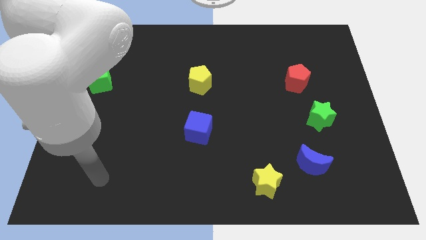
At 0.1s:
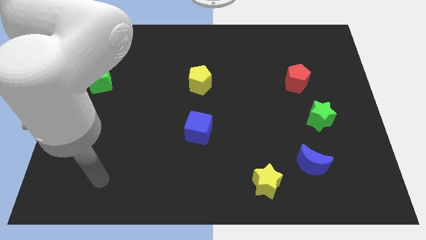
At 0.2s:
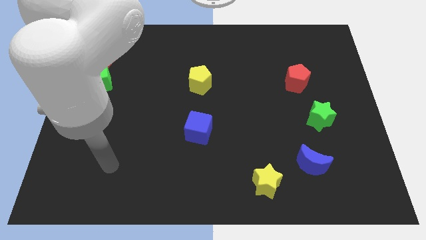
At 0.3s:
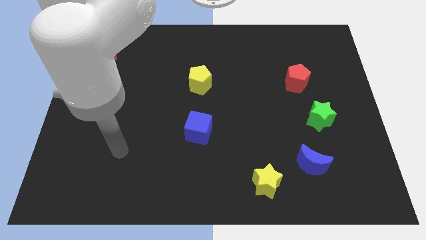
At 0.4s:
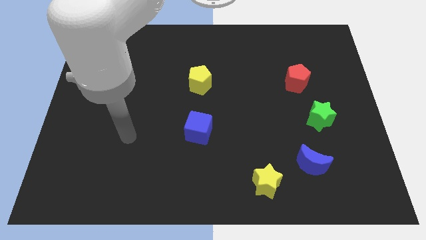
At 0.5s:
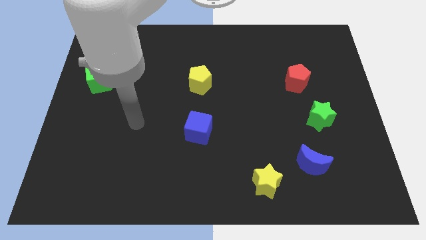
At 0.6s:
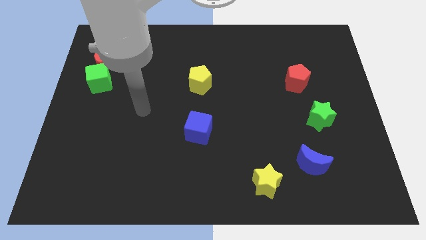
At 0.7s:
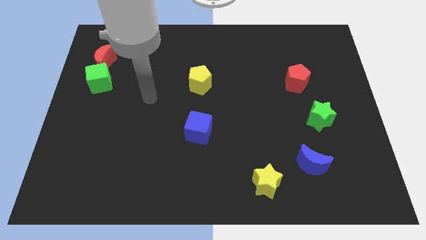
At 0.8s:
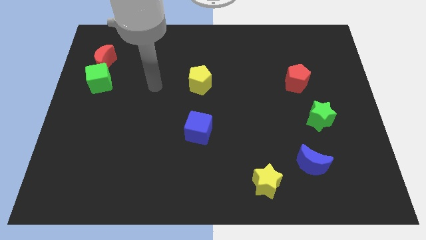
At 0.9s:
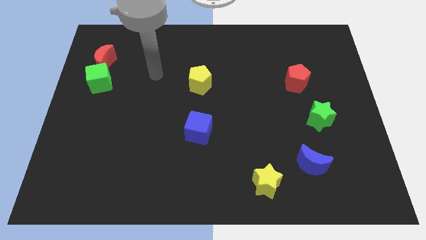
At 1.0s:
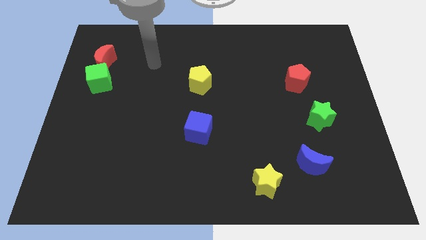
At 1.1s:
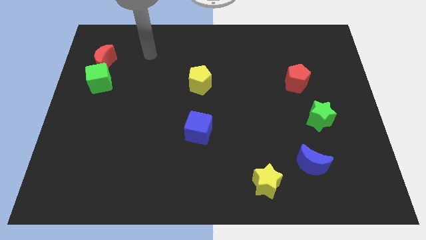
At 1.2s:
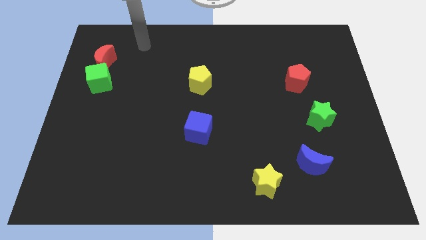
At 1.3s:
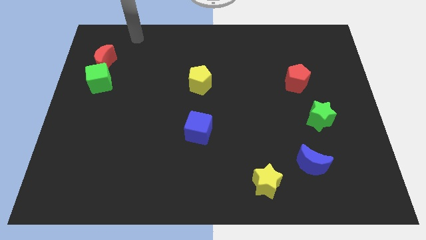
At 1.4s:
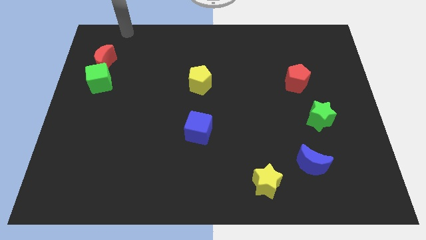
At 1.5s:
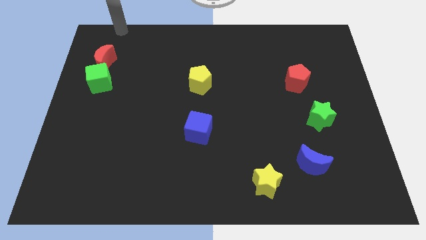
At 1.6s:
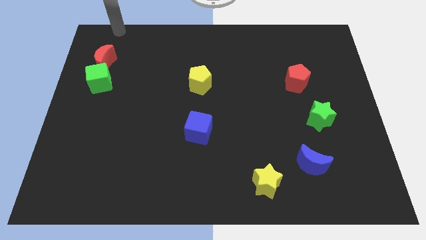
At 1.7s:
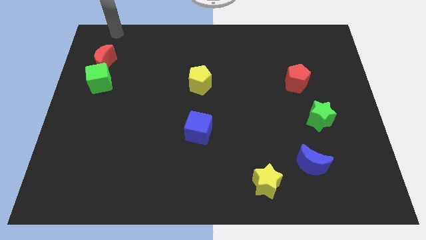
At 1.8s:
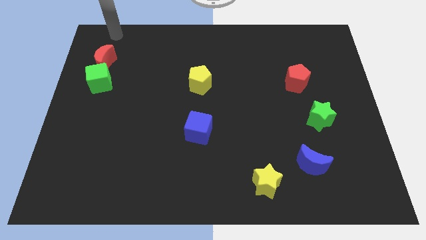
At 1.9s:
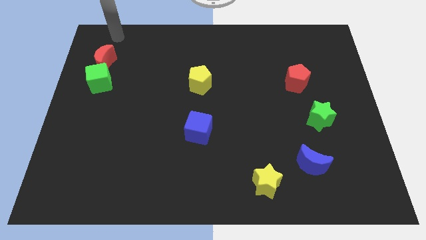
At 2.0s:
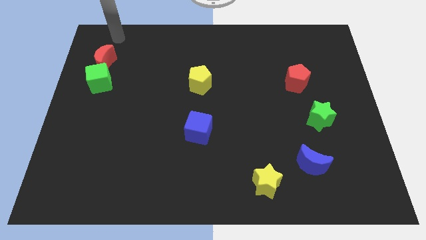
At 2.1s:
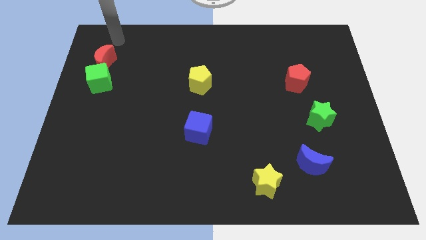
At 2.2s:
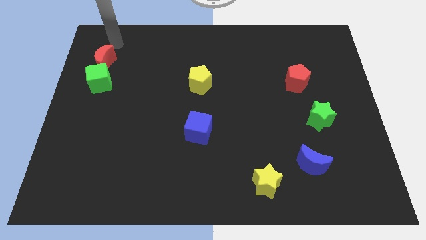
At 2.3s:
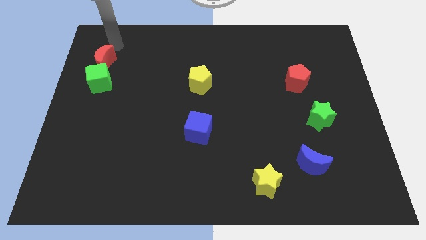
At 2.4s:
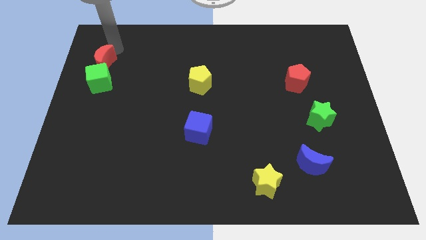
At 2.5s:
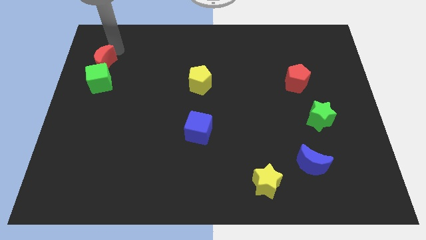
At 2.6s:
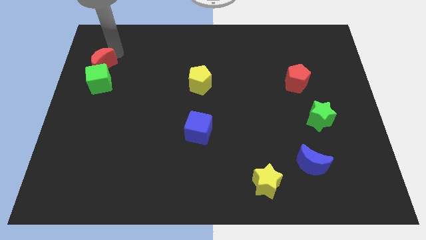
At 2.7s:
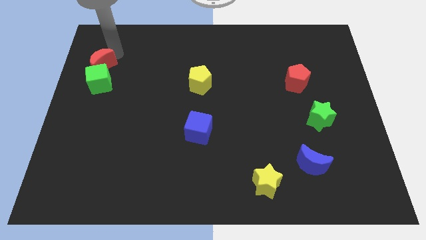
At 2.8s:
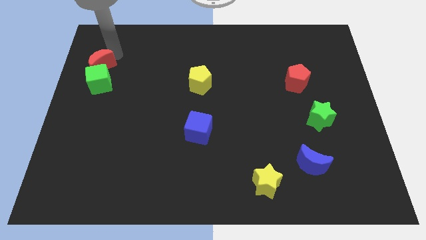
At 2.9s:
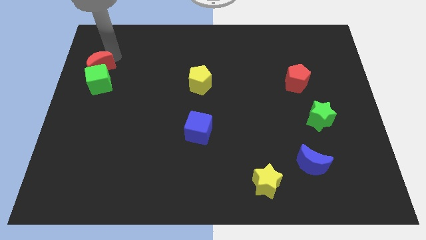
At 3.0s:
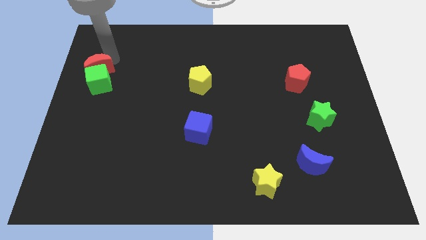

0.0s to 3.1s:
push the red crescent into the green cube

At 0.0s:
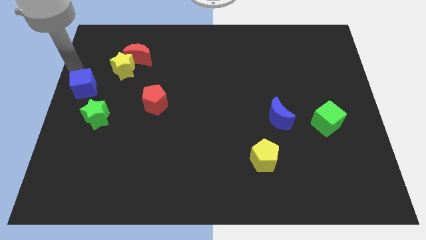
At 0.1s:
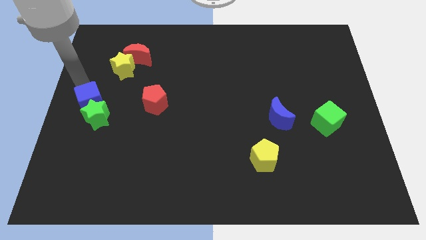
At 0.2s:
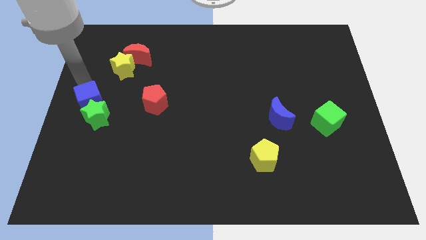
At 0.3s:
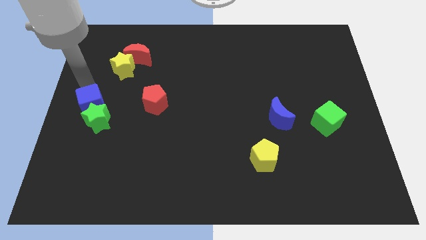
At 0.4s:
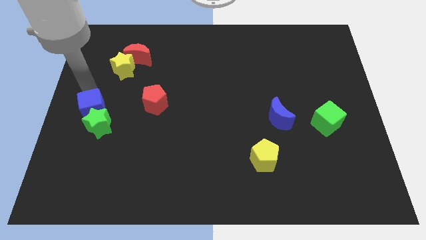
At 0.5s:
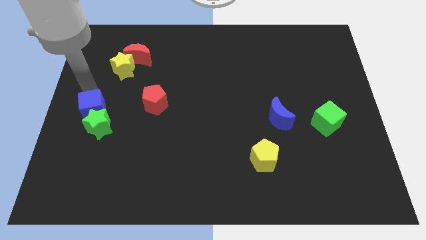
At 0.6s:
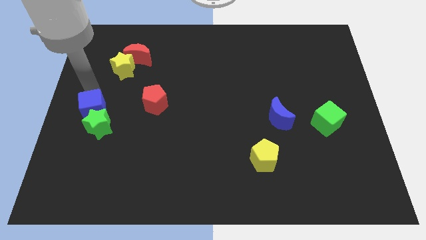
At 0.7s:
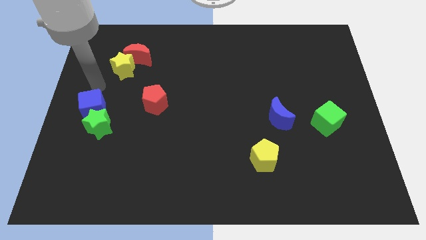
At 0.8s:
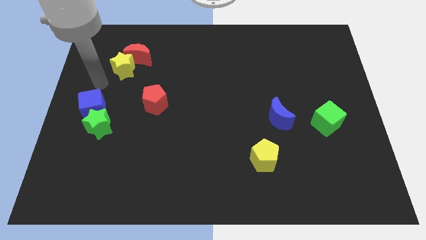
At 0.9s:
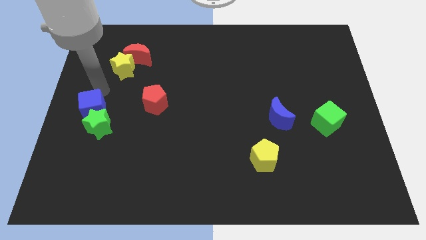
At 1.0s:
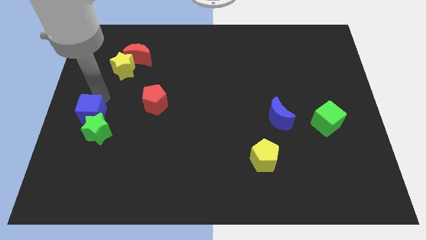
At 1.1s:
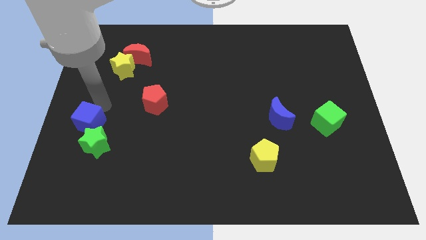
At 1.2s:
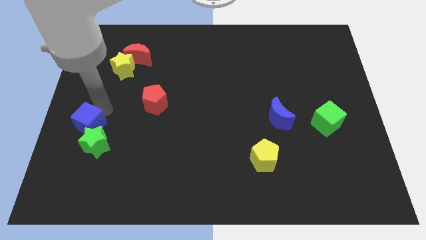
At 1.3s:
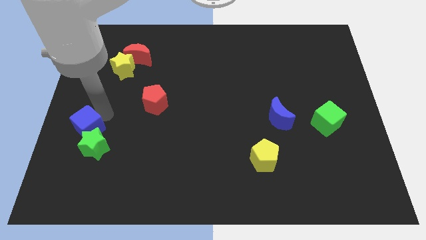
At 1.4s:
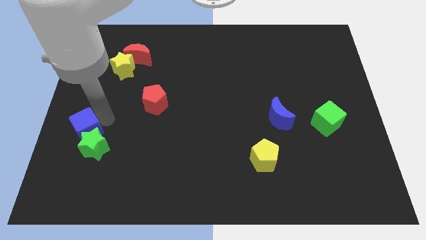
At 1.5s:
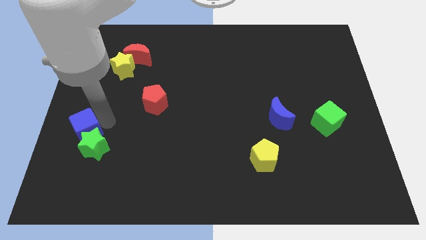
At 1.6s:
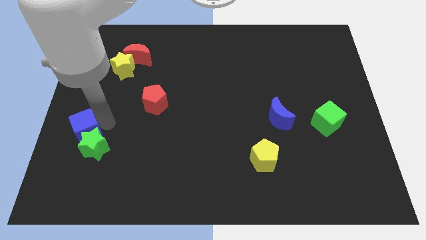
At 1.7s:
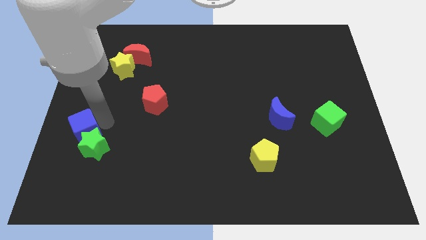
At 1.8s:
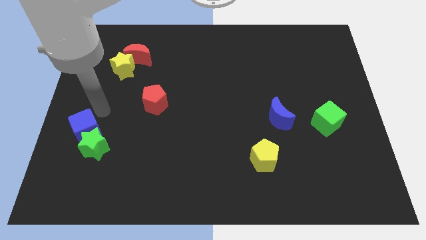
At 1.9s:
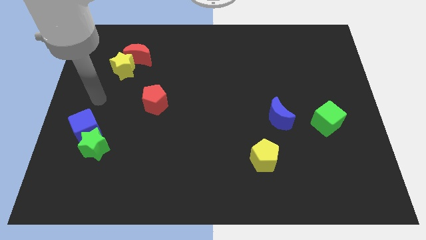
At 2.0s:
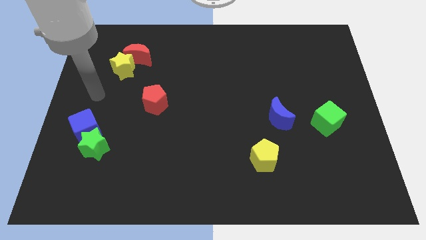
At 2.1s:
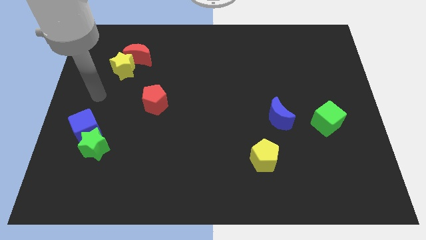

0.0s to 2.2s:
move the blue cube along with the green star towards the bottom side

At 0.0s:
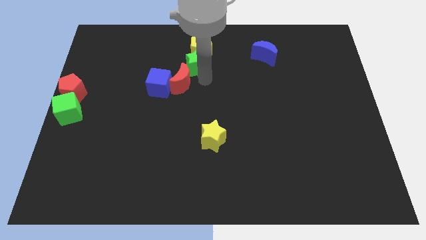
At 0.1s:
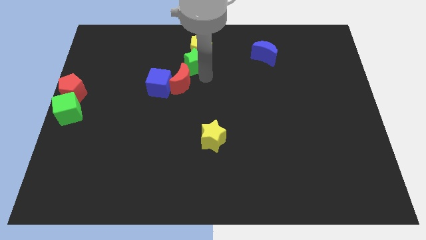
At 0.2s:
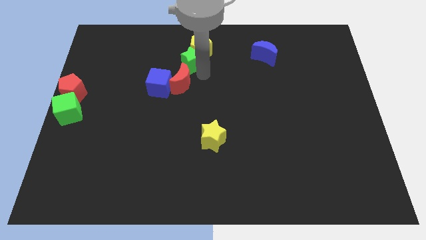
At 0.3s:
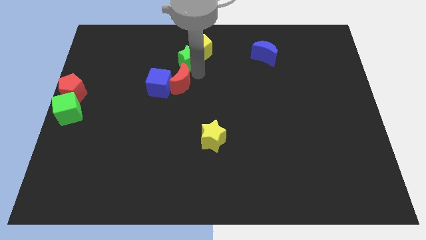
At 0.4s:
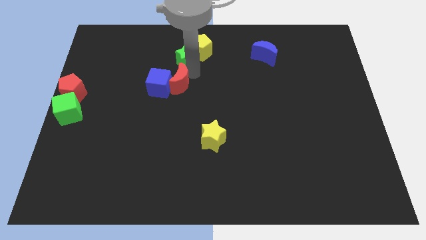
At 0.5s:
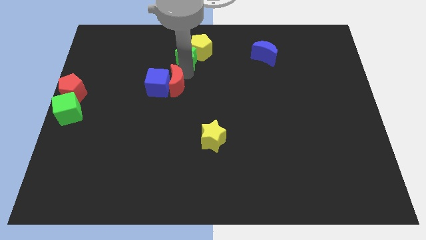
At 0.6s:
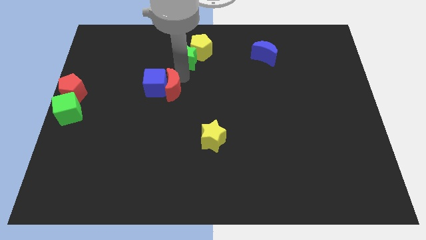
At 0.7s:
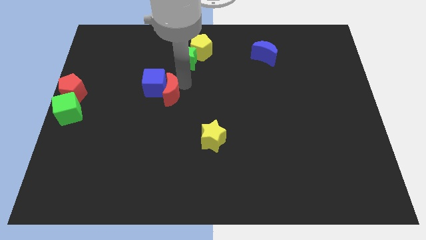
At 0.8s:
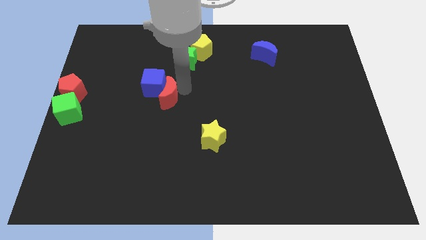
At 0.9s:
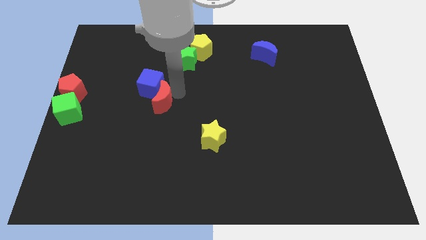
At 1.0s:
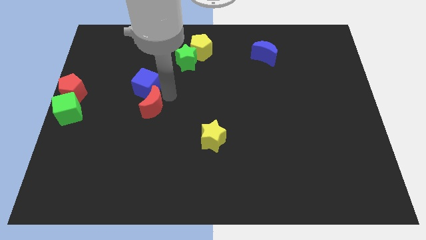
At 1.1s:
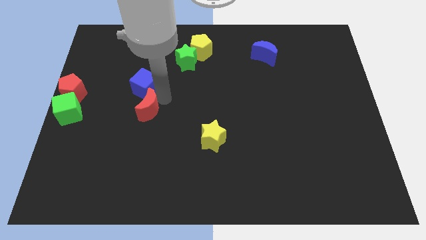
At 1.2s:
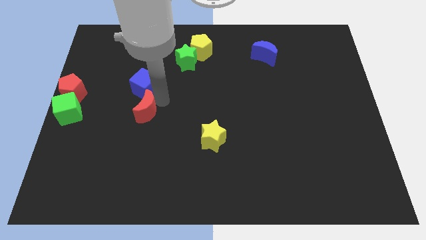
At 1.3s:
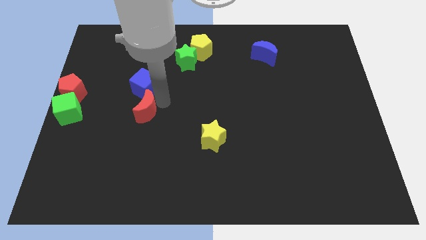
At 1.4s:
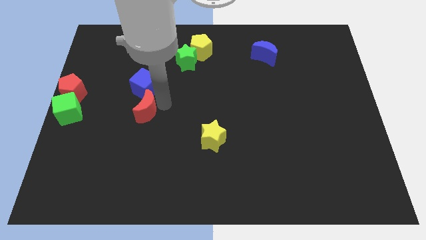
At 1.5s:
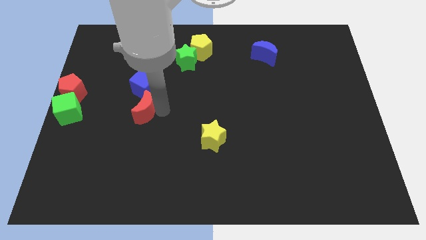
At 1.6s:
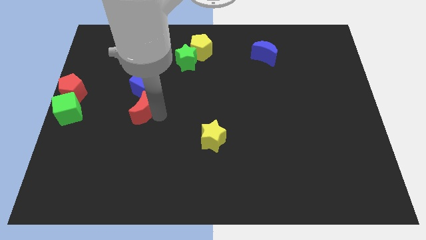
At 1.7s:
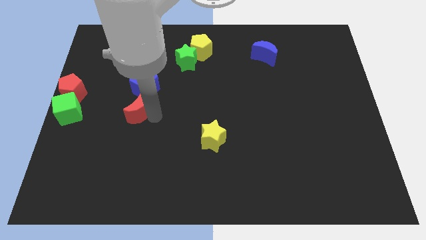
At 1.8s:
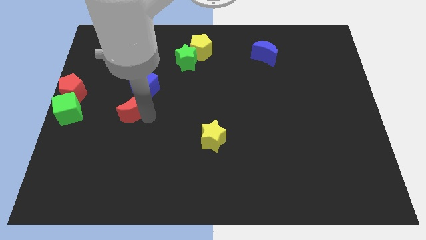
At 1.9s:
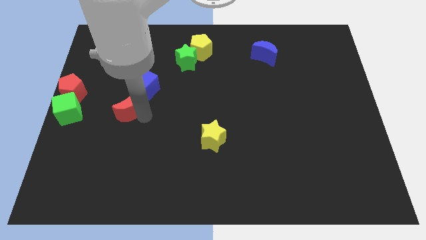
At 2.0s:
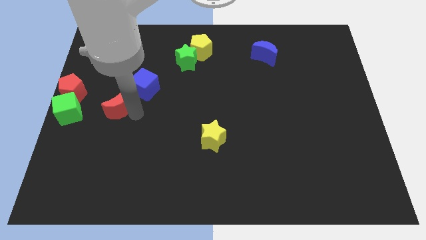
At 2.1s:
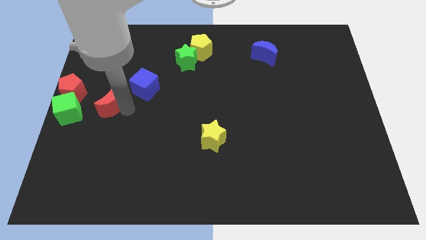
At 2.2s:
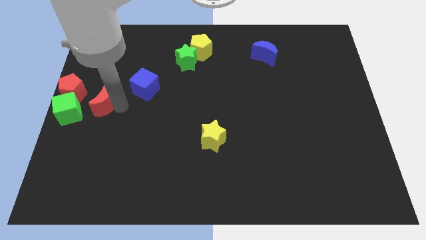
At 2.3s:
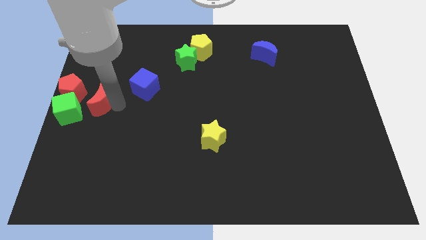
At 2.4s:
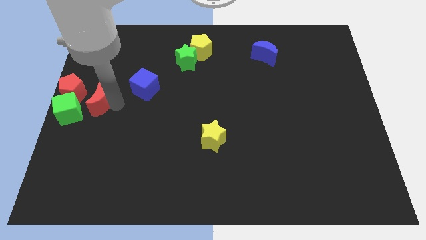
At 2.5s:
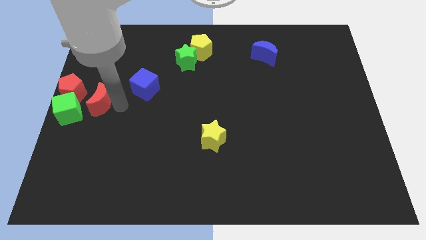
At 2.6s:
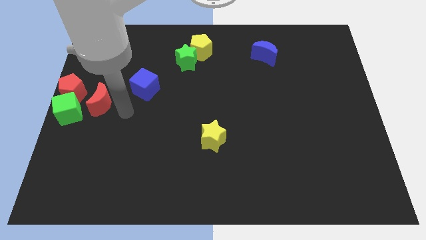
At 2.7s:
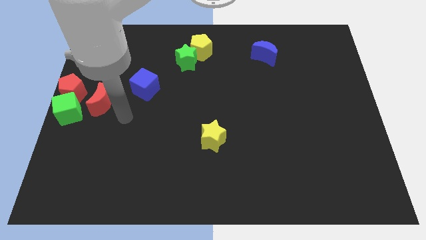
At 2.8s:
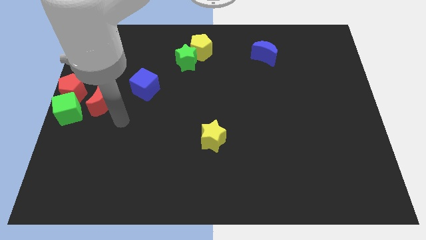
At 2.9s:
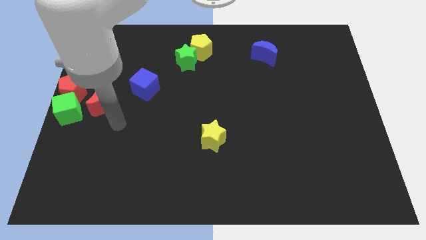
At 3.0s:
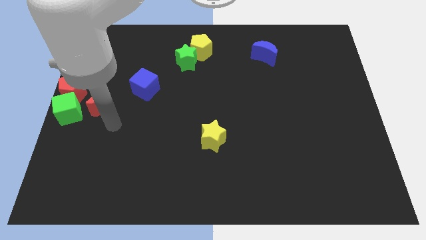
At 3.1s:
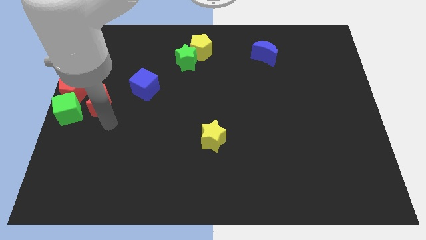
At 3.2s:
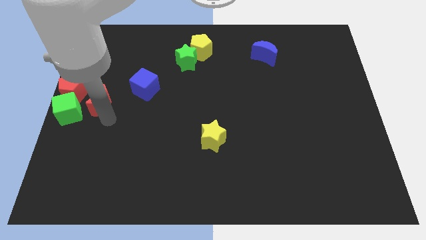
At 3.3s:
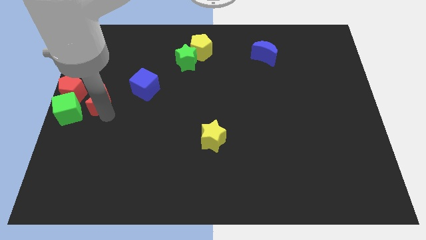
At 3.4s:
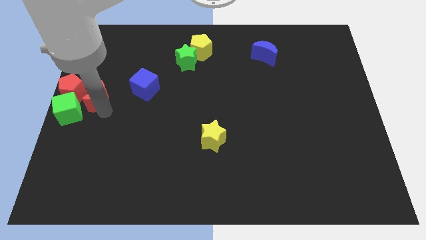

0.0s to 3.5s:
push red moon near green cube
